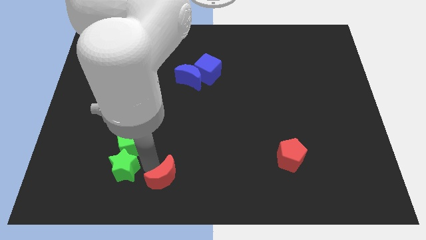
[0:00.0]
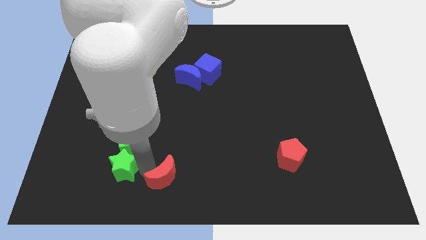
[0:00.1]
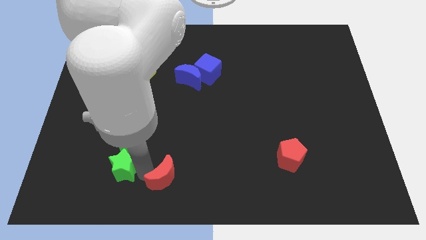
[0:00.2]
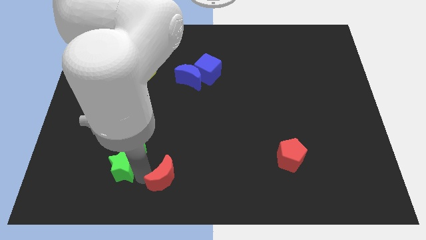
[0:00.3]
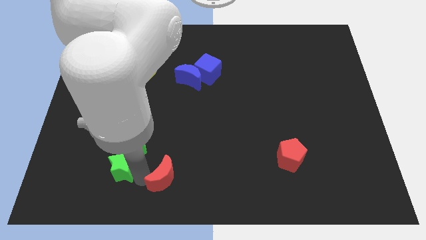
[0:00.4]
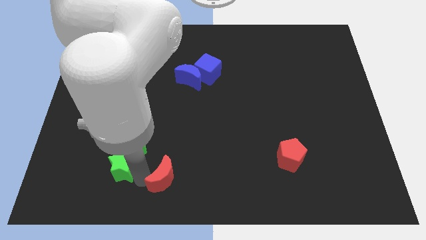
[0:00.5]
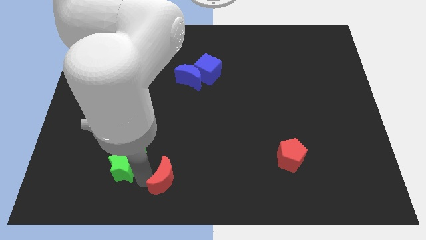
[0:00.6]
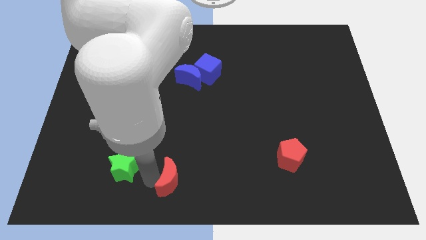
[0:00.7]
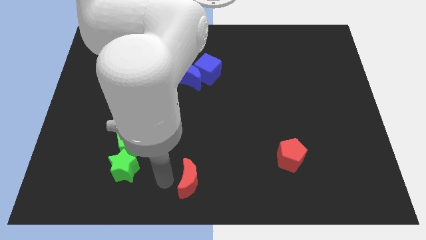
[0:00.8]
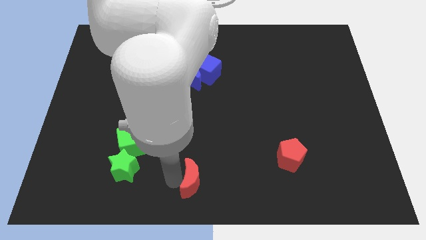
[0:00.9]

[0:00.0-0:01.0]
move the red moon away from the green star

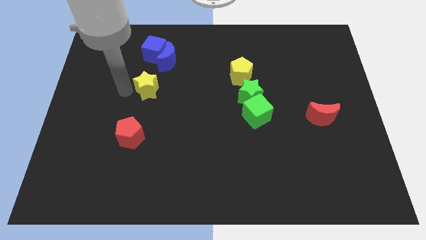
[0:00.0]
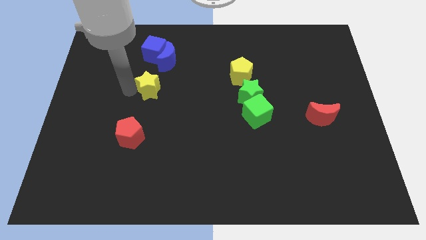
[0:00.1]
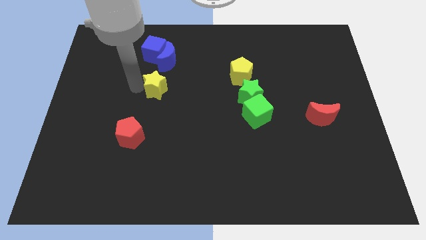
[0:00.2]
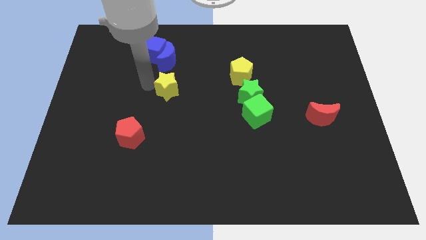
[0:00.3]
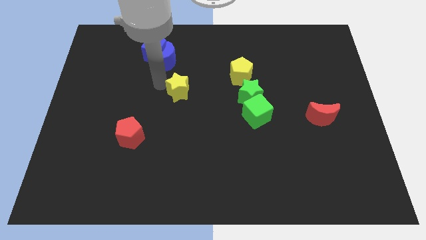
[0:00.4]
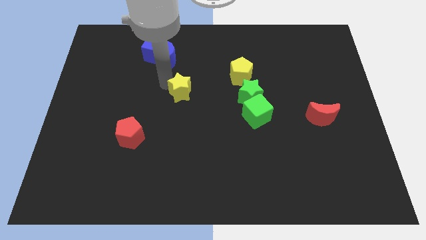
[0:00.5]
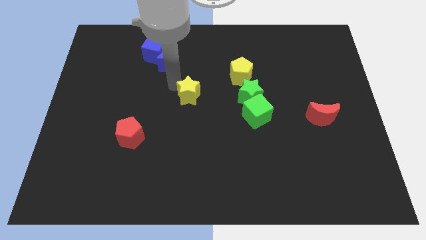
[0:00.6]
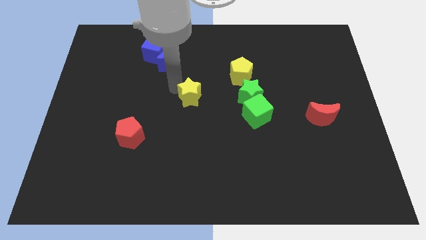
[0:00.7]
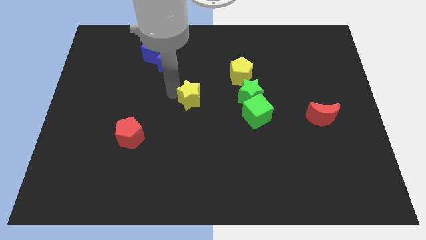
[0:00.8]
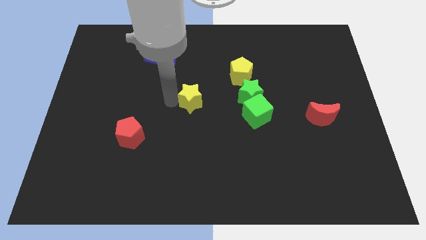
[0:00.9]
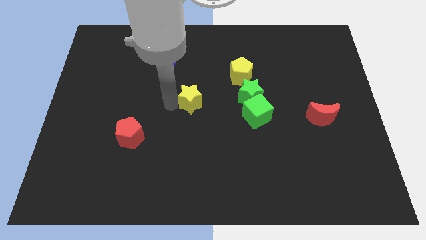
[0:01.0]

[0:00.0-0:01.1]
slide the yellow star to the center of the board

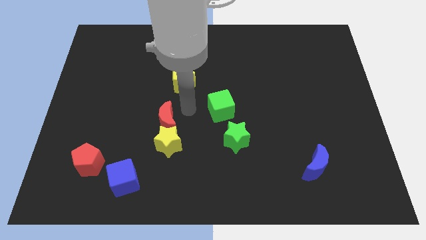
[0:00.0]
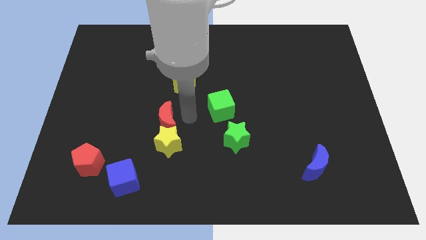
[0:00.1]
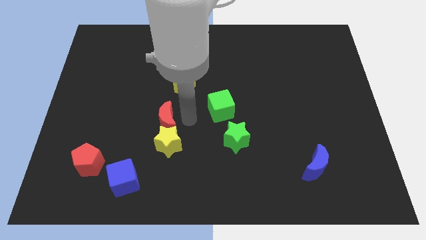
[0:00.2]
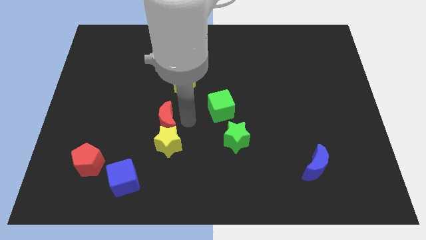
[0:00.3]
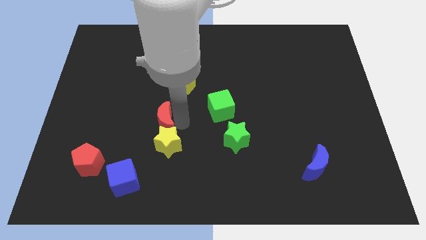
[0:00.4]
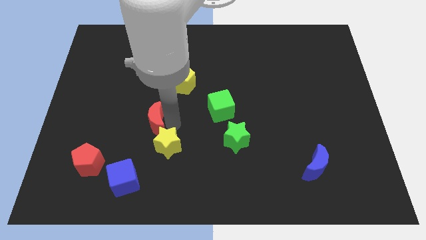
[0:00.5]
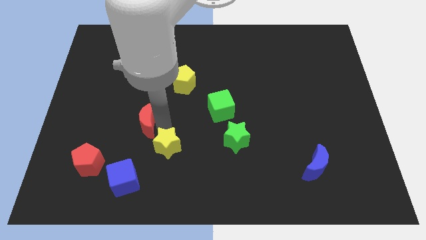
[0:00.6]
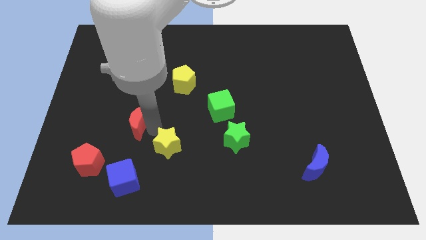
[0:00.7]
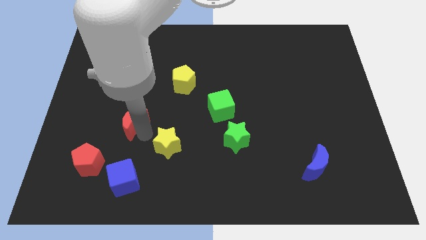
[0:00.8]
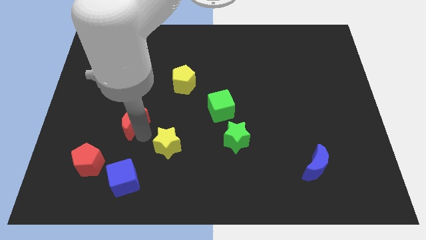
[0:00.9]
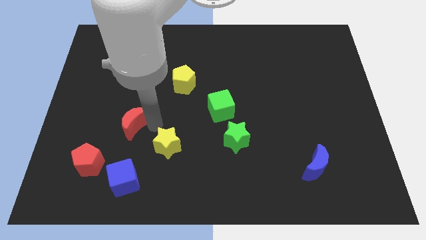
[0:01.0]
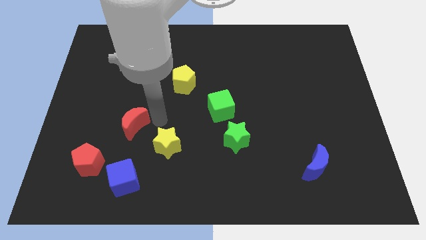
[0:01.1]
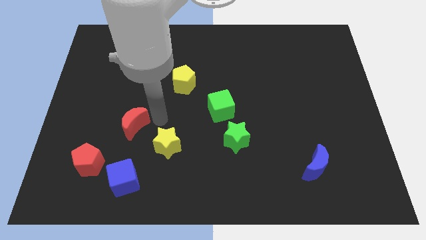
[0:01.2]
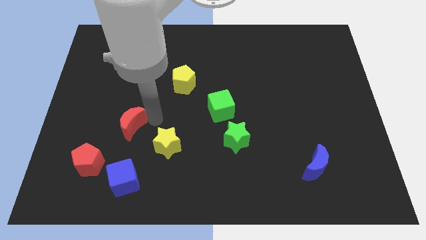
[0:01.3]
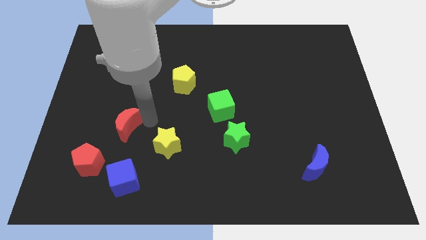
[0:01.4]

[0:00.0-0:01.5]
place red moon to the top of blue cube

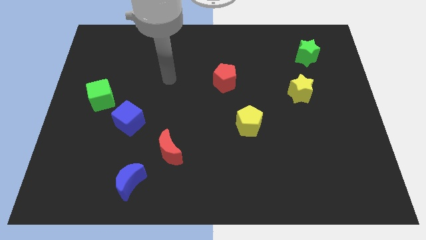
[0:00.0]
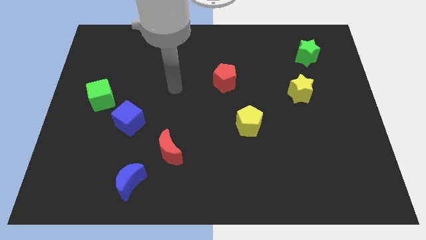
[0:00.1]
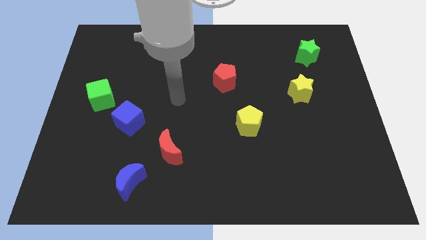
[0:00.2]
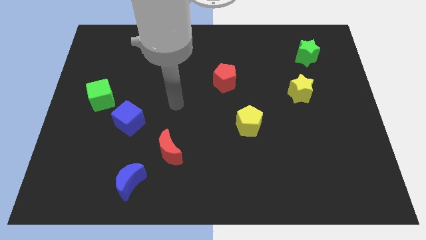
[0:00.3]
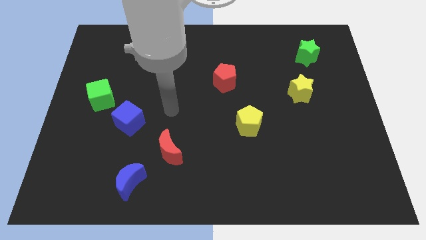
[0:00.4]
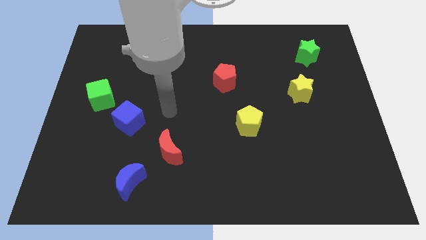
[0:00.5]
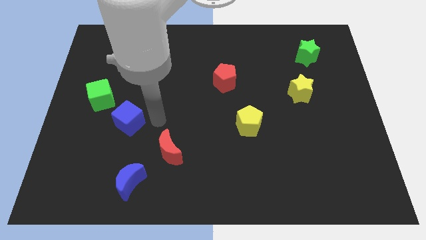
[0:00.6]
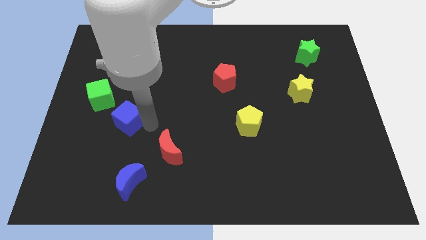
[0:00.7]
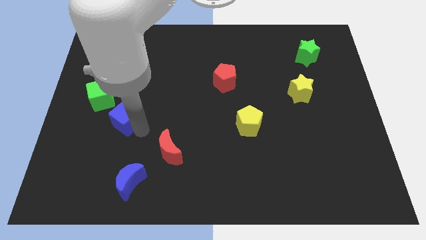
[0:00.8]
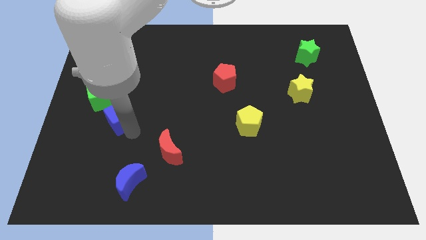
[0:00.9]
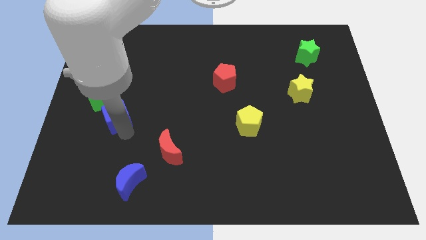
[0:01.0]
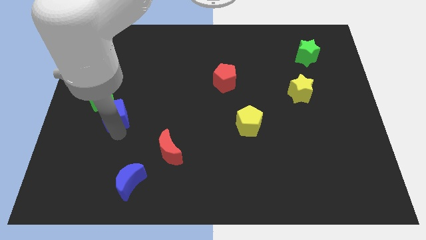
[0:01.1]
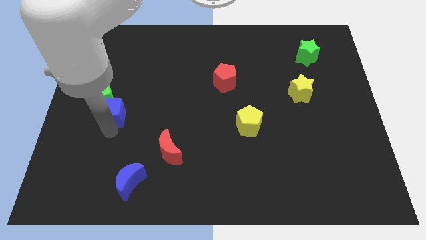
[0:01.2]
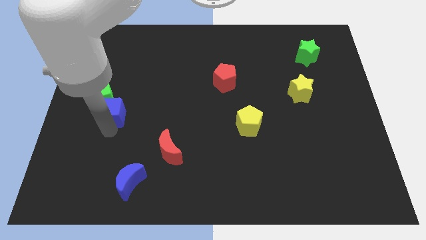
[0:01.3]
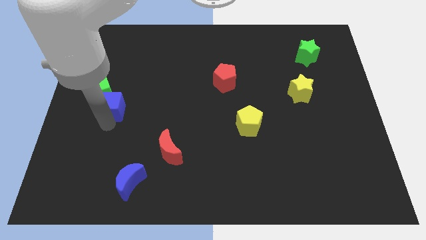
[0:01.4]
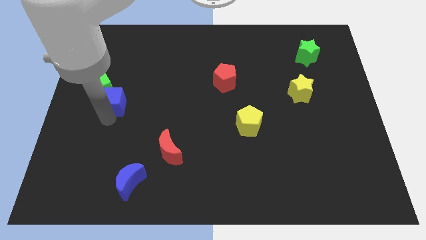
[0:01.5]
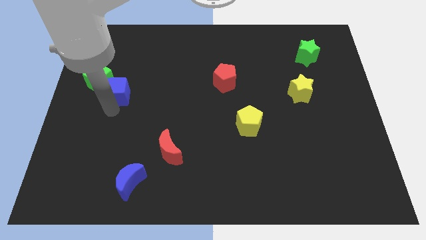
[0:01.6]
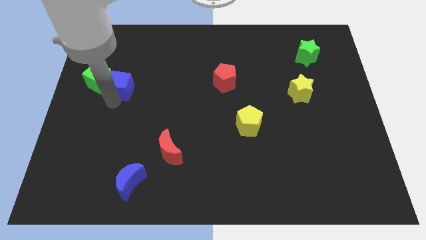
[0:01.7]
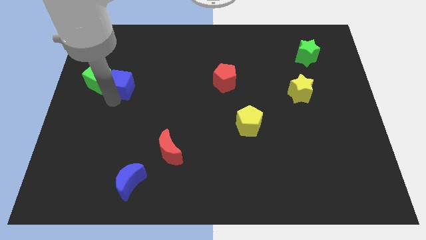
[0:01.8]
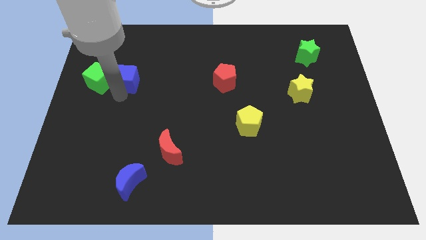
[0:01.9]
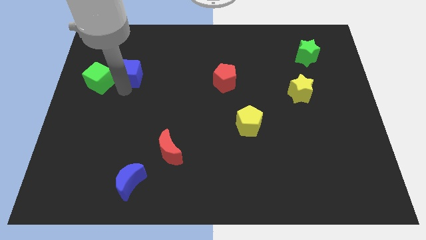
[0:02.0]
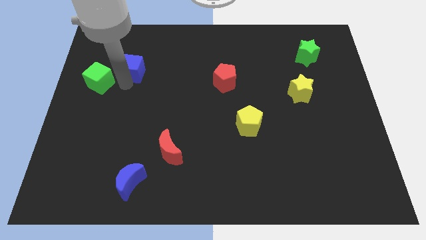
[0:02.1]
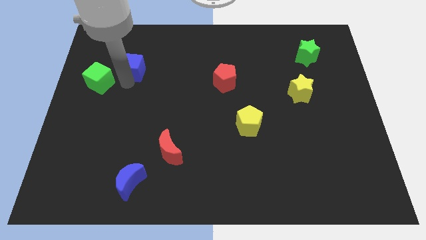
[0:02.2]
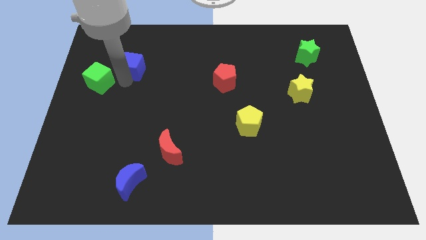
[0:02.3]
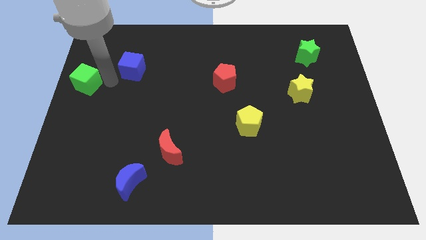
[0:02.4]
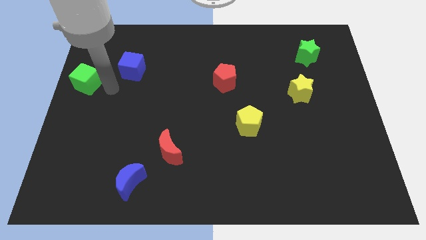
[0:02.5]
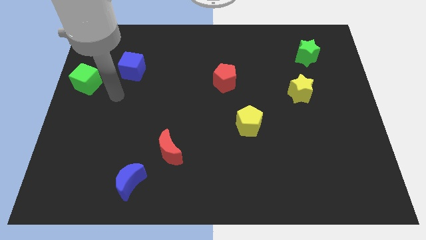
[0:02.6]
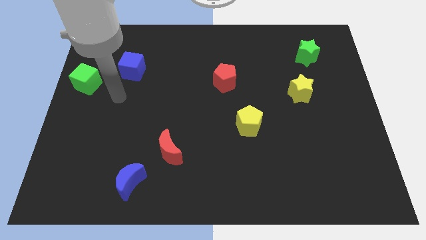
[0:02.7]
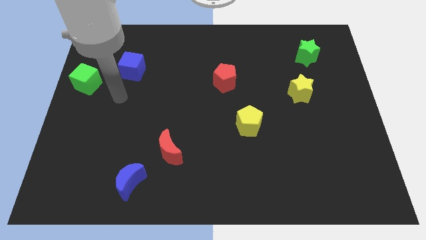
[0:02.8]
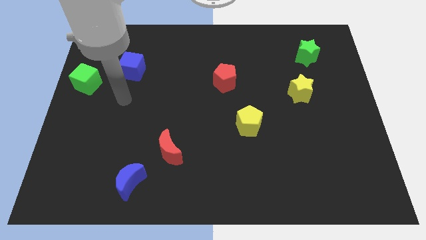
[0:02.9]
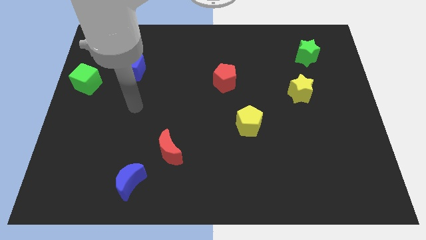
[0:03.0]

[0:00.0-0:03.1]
move the blue cube to the right side of the green cube

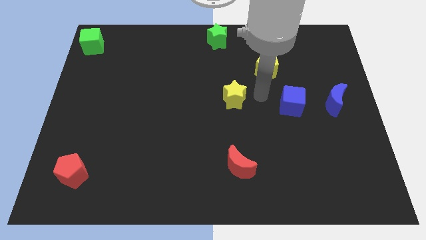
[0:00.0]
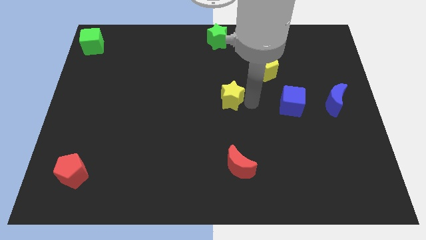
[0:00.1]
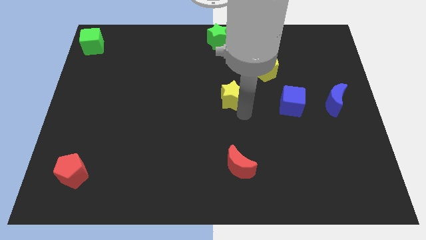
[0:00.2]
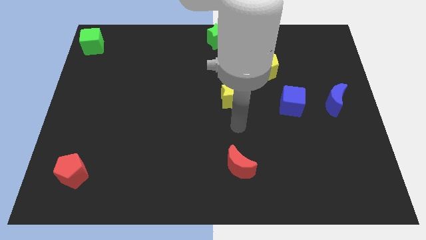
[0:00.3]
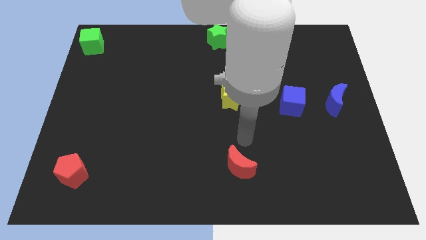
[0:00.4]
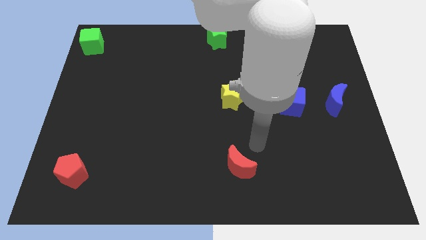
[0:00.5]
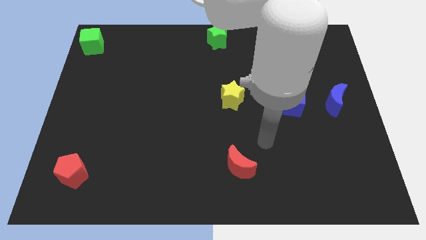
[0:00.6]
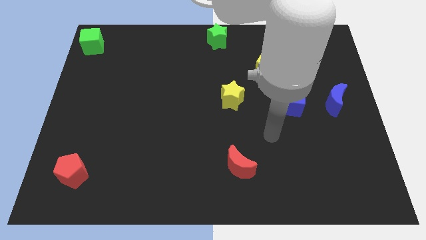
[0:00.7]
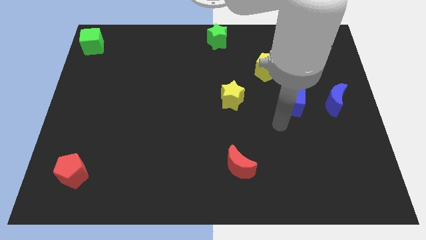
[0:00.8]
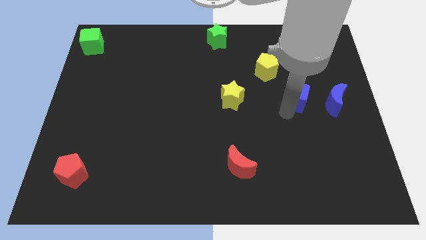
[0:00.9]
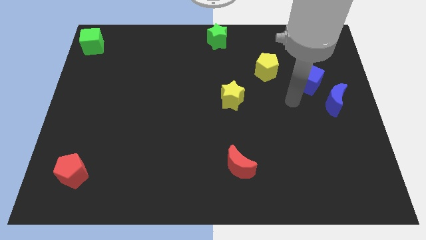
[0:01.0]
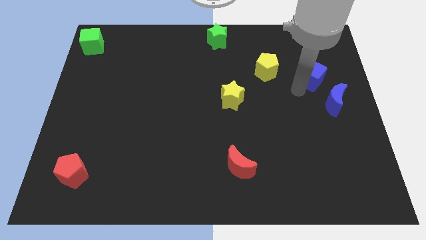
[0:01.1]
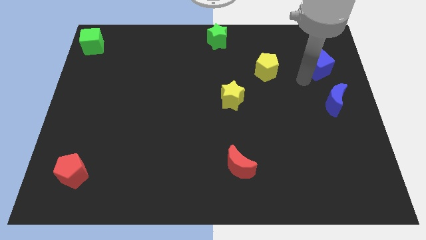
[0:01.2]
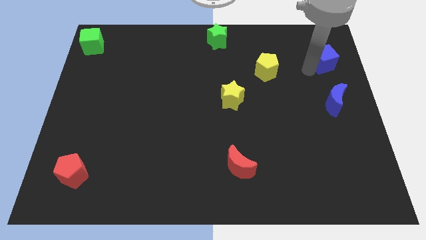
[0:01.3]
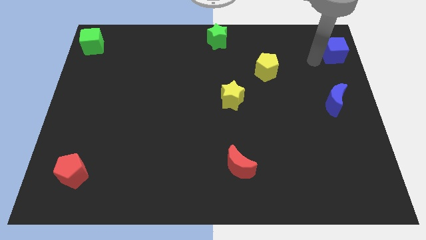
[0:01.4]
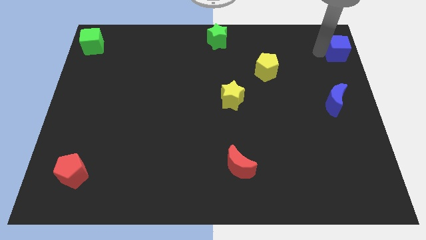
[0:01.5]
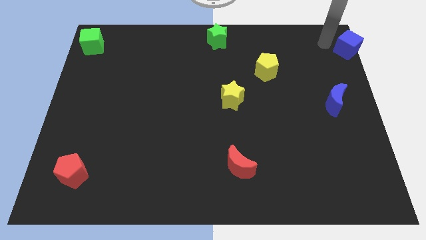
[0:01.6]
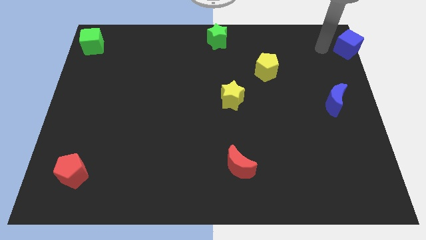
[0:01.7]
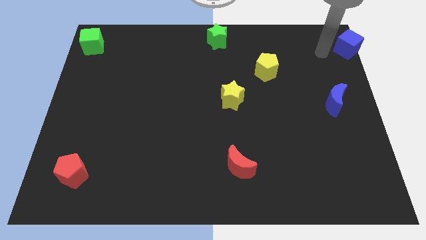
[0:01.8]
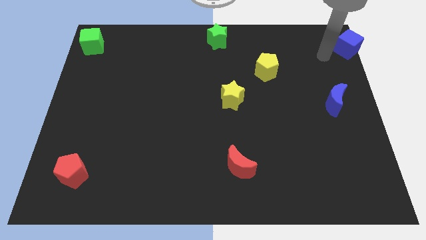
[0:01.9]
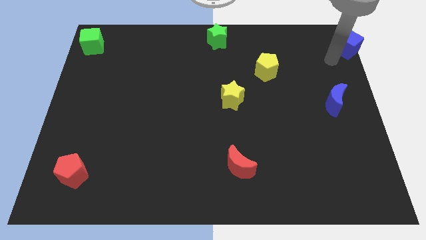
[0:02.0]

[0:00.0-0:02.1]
move blue cube towards top right

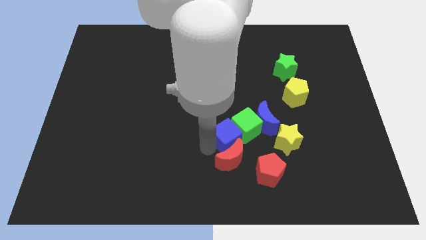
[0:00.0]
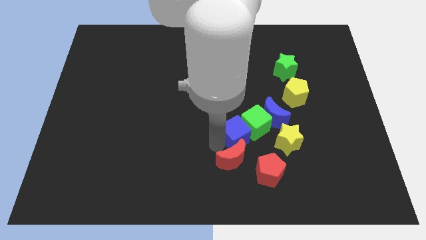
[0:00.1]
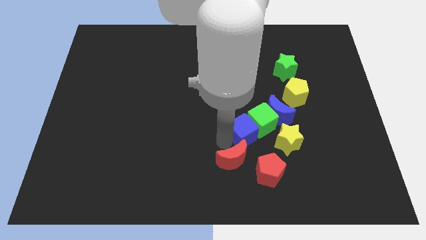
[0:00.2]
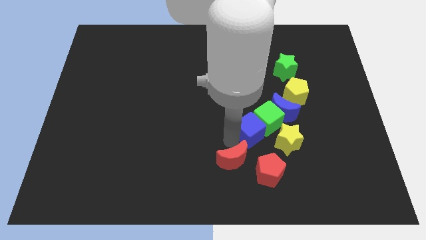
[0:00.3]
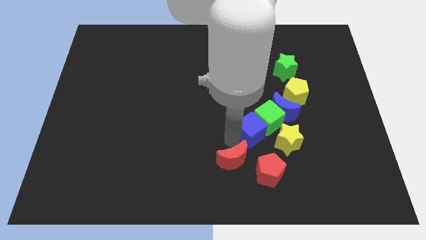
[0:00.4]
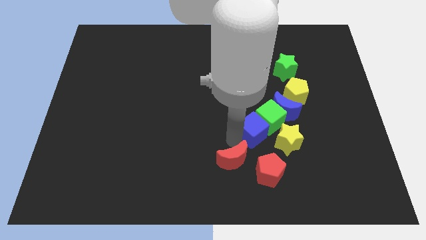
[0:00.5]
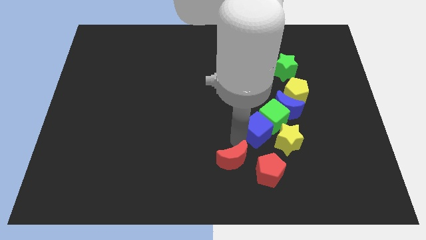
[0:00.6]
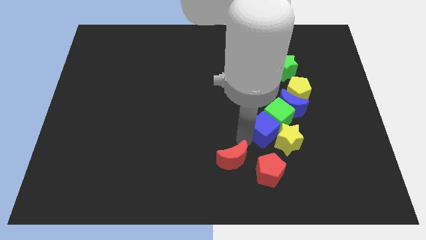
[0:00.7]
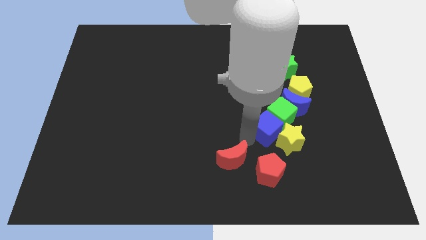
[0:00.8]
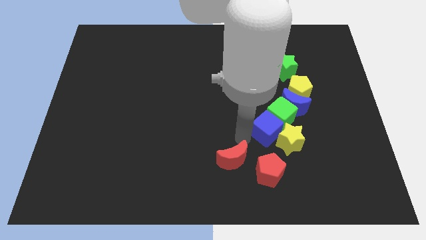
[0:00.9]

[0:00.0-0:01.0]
separate blue cube from red moon
